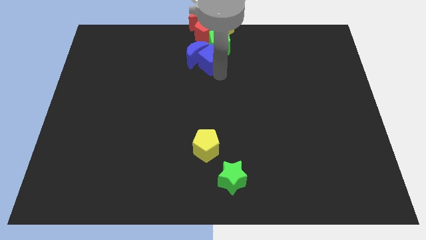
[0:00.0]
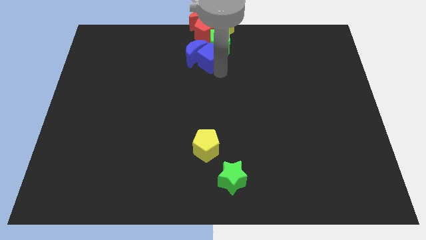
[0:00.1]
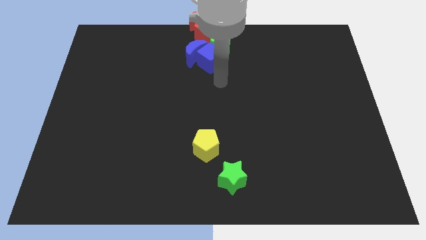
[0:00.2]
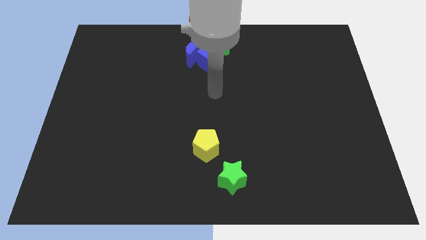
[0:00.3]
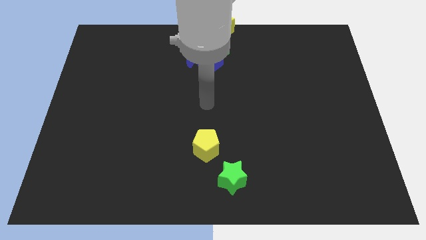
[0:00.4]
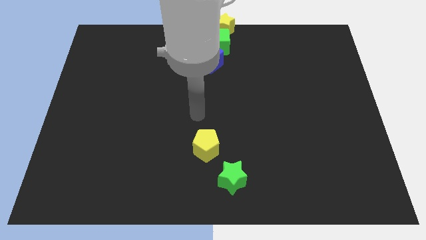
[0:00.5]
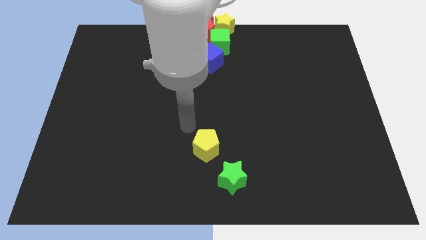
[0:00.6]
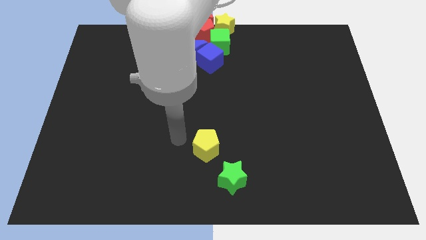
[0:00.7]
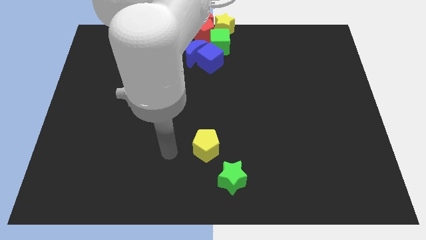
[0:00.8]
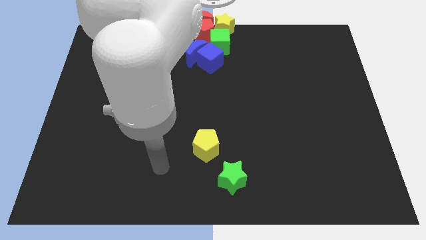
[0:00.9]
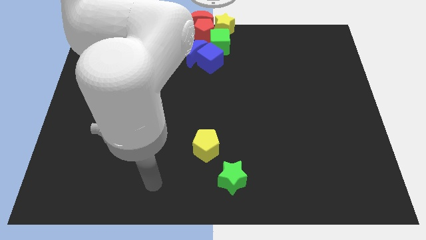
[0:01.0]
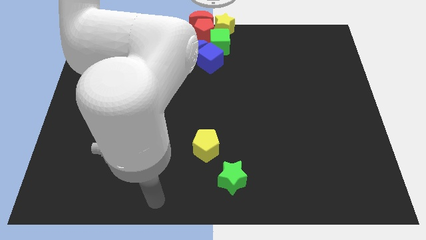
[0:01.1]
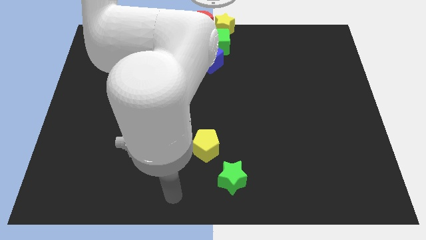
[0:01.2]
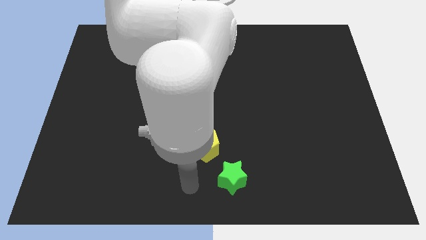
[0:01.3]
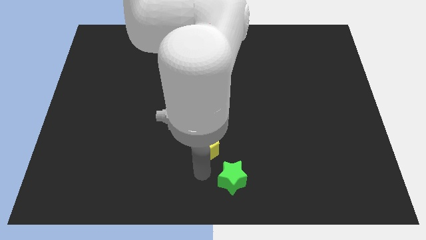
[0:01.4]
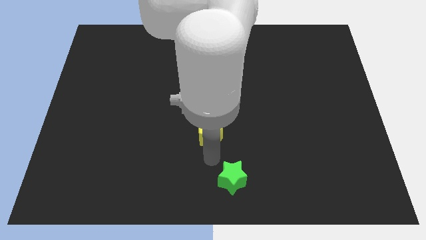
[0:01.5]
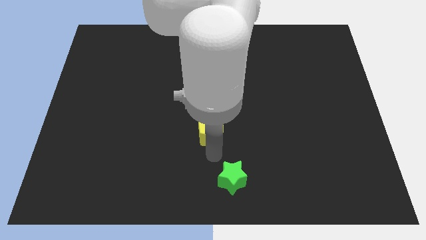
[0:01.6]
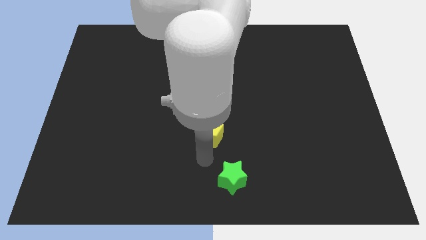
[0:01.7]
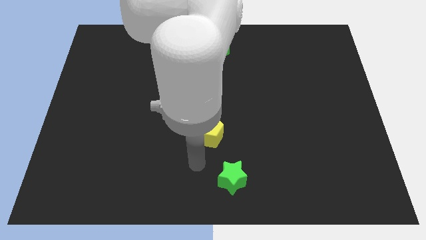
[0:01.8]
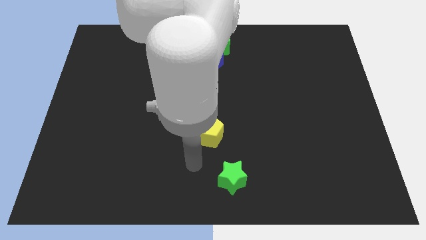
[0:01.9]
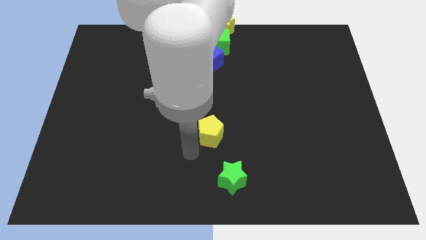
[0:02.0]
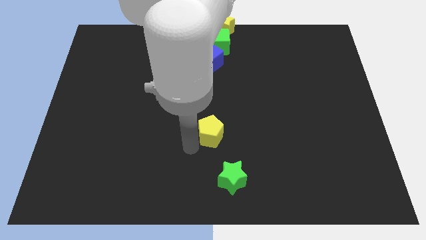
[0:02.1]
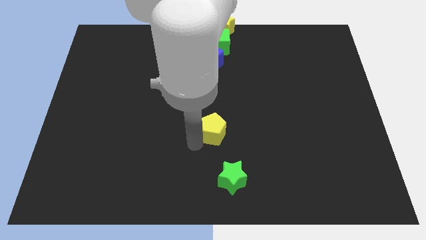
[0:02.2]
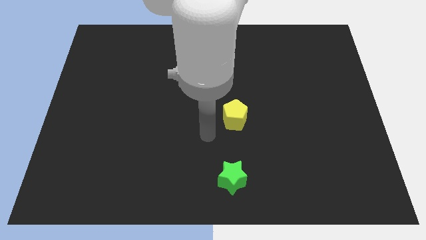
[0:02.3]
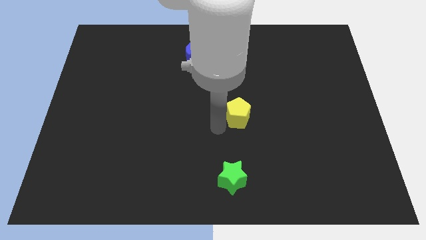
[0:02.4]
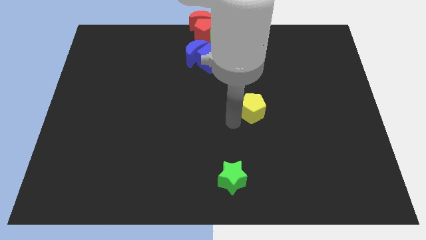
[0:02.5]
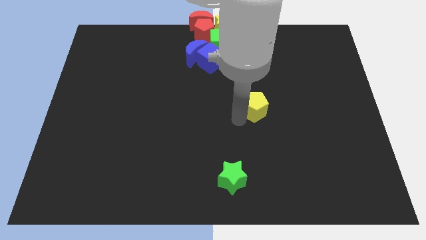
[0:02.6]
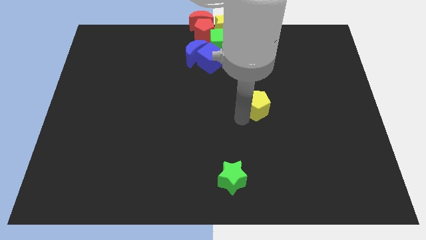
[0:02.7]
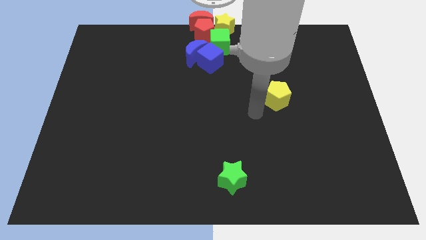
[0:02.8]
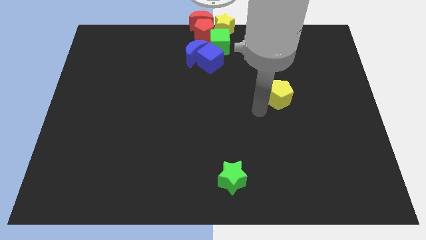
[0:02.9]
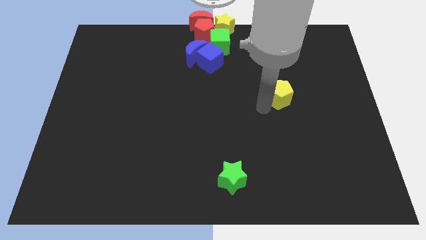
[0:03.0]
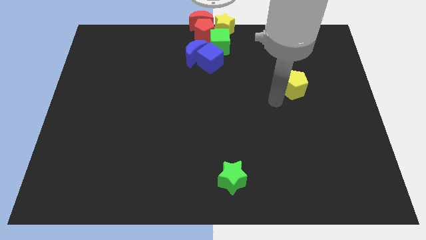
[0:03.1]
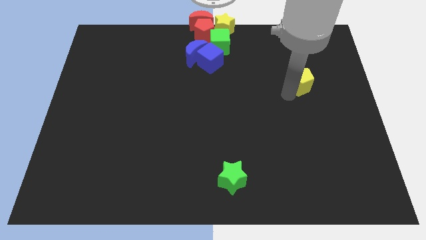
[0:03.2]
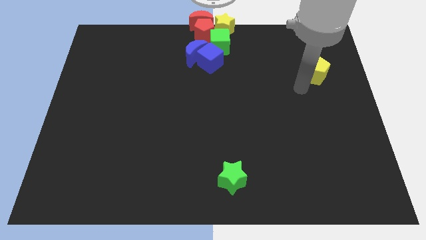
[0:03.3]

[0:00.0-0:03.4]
push the yellow pentagon to right side of the board

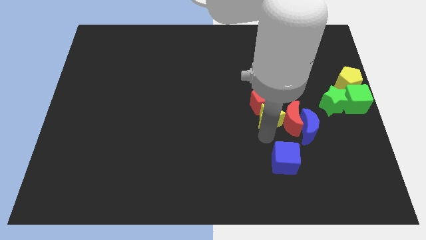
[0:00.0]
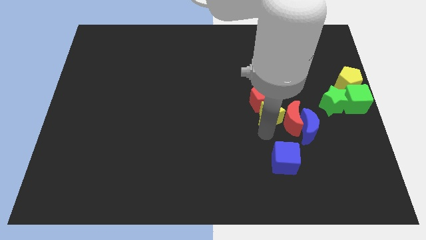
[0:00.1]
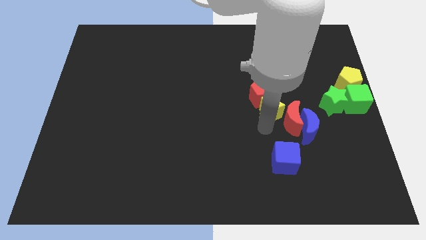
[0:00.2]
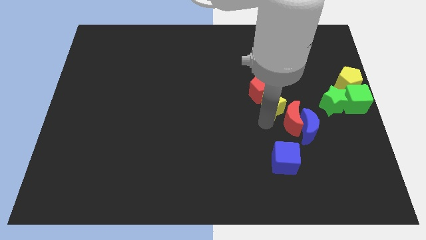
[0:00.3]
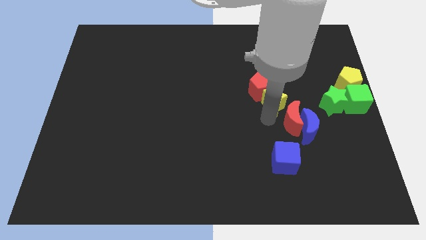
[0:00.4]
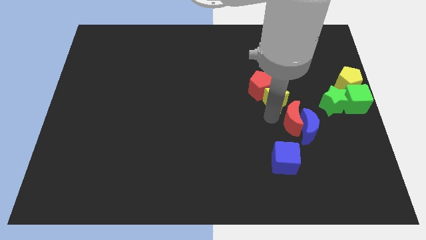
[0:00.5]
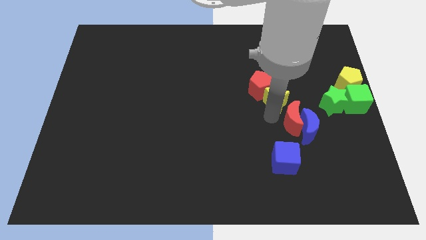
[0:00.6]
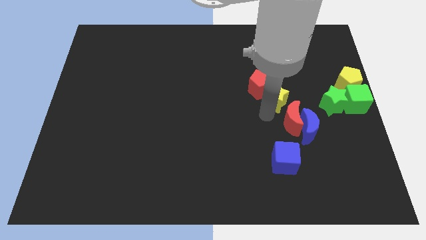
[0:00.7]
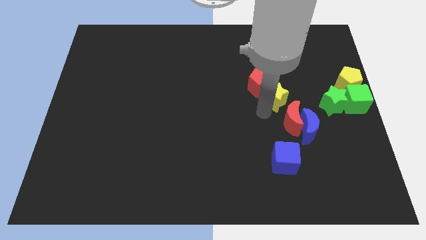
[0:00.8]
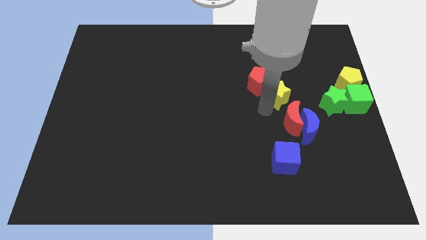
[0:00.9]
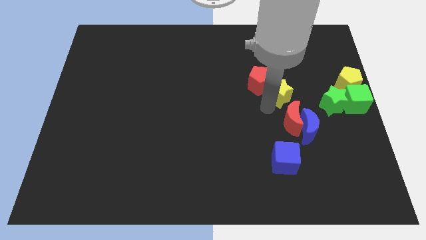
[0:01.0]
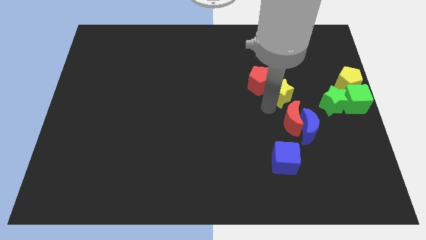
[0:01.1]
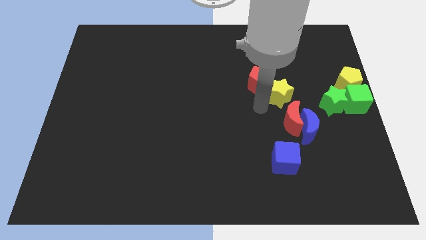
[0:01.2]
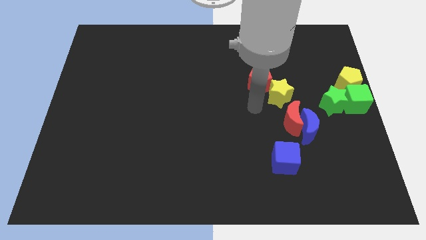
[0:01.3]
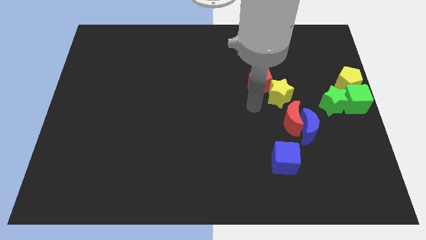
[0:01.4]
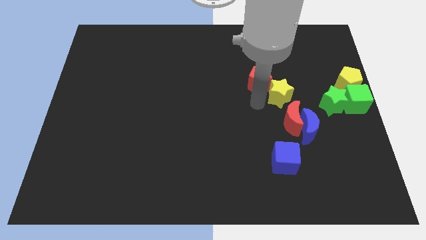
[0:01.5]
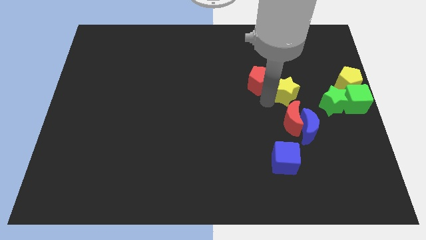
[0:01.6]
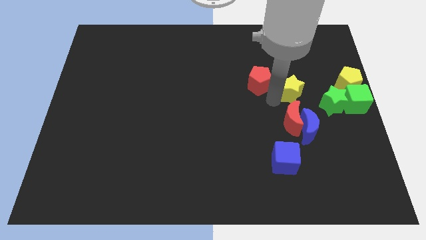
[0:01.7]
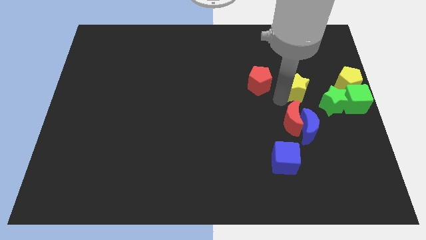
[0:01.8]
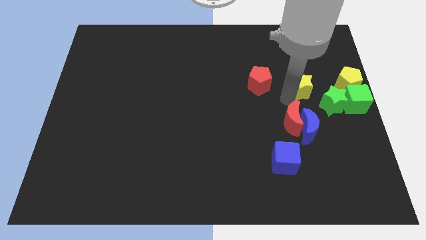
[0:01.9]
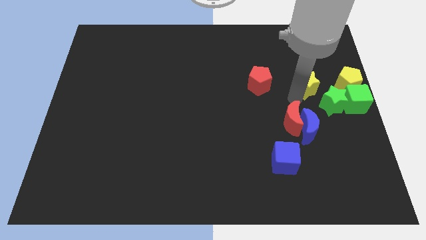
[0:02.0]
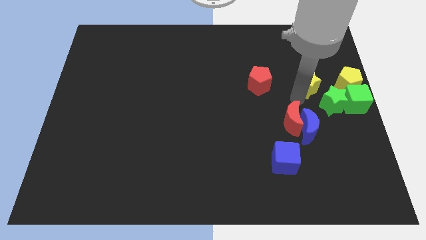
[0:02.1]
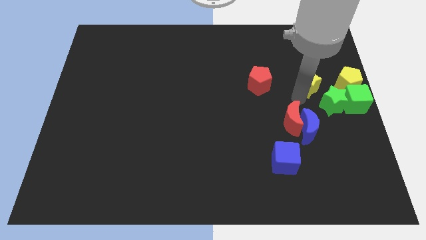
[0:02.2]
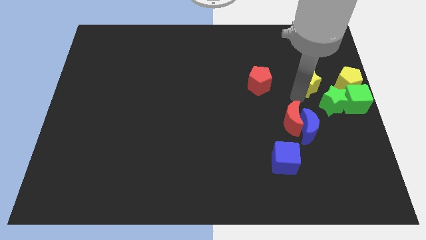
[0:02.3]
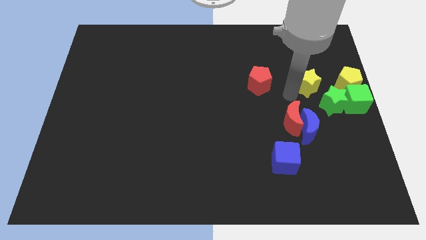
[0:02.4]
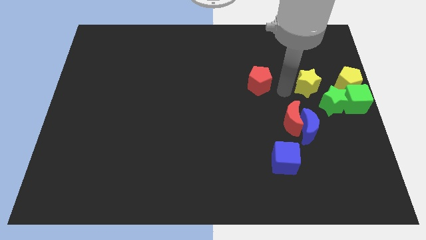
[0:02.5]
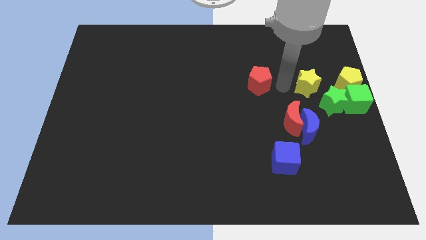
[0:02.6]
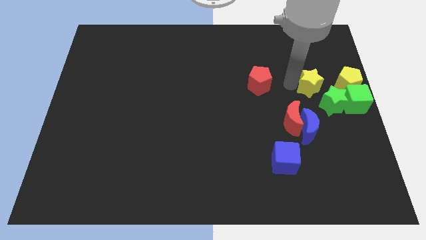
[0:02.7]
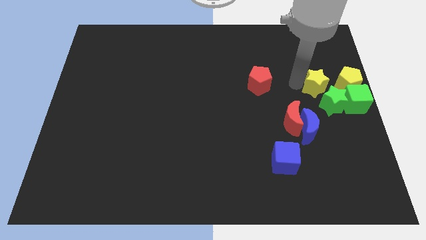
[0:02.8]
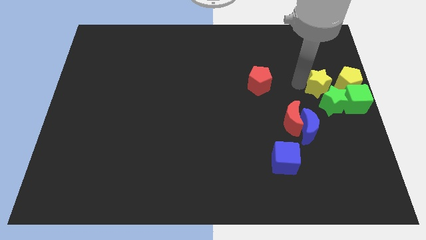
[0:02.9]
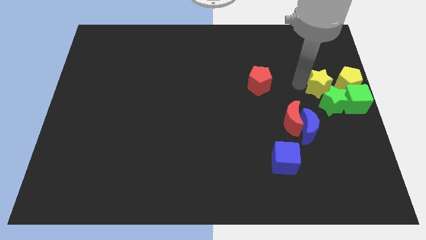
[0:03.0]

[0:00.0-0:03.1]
make the red pentagon and yellow star parallel to each other

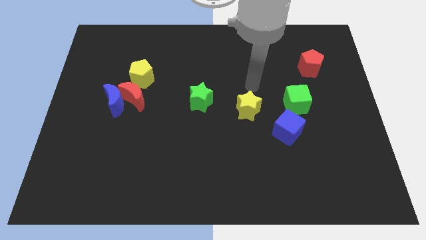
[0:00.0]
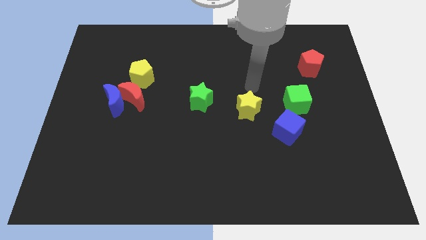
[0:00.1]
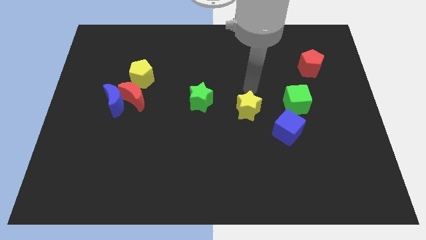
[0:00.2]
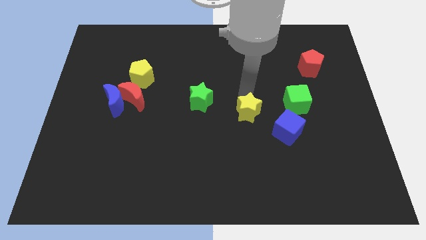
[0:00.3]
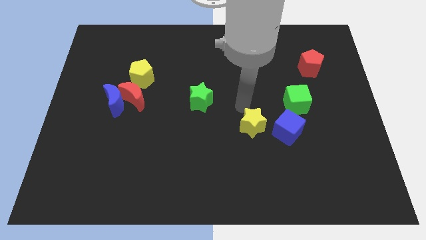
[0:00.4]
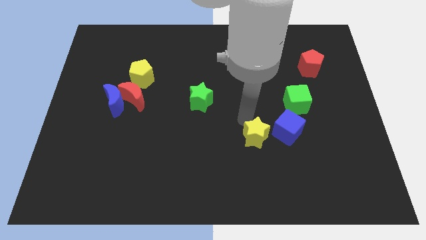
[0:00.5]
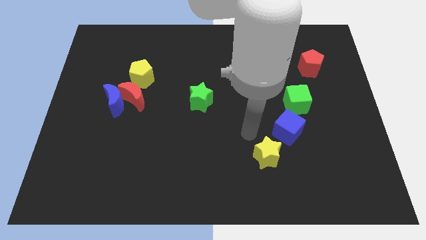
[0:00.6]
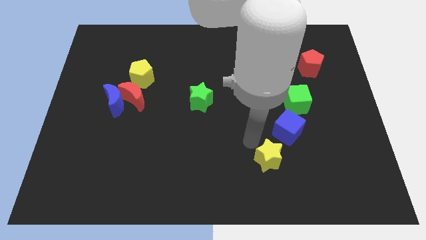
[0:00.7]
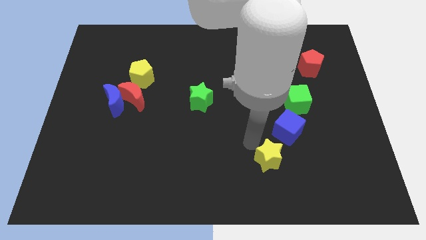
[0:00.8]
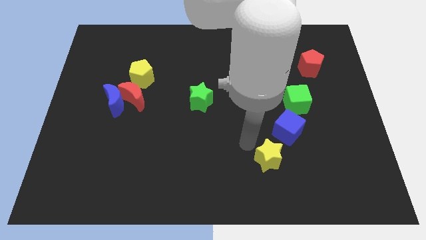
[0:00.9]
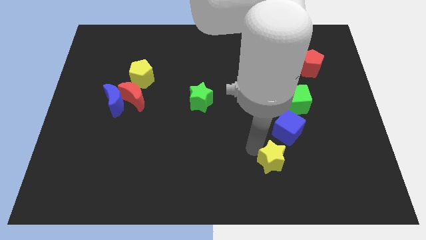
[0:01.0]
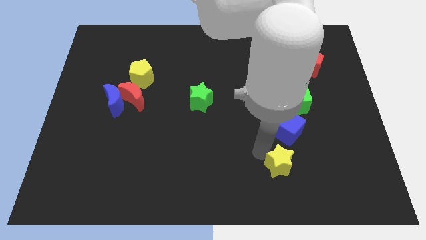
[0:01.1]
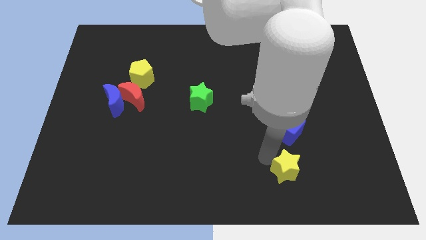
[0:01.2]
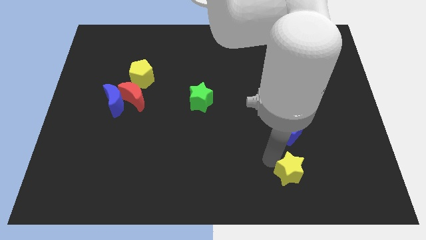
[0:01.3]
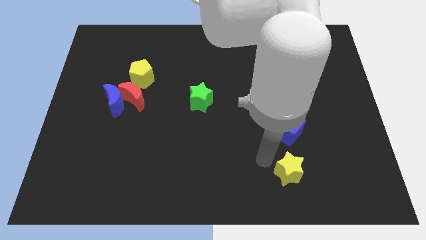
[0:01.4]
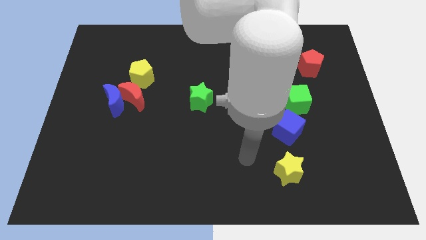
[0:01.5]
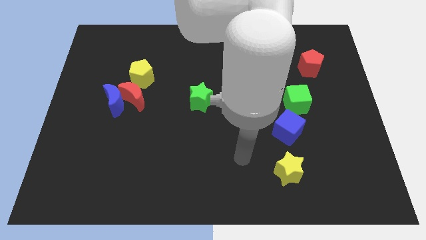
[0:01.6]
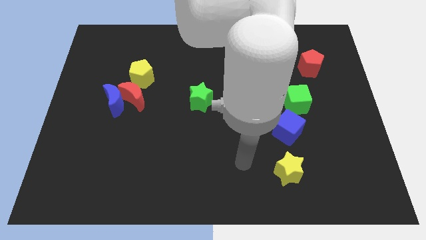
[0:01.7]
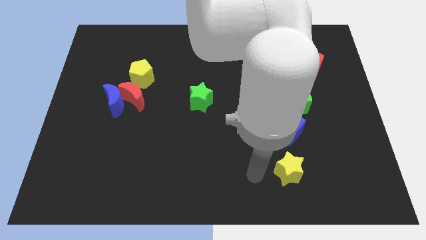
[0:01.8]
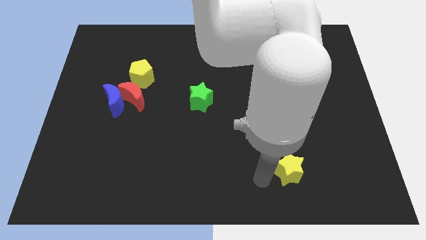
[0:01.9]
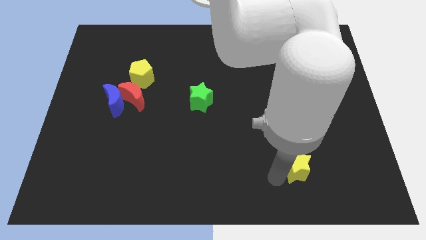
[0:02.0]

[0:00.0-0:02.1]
push the yellow star towards bottom right

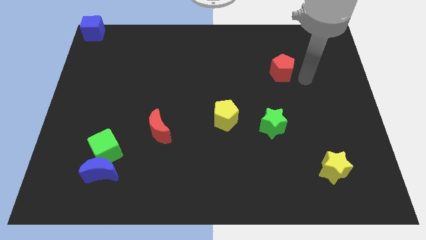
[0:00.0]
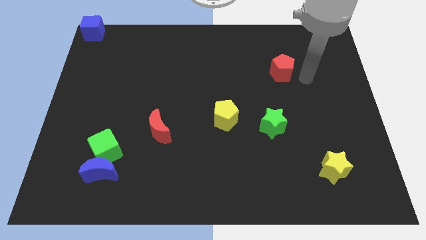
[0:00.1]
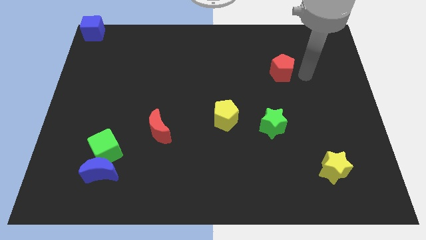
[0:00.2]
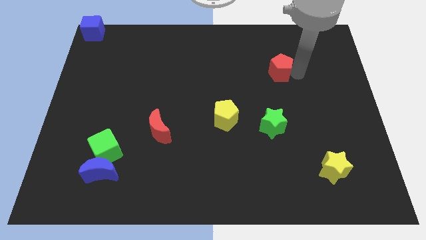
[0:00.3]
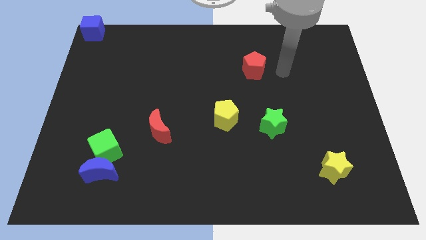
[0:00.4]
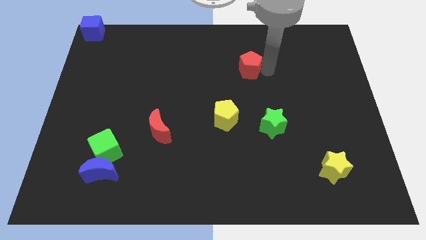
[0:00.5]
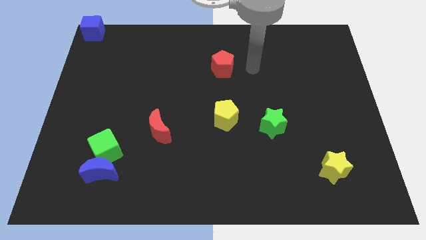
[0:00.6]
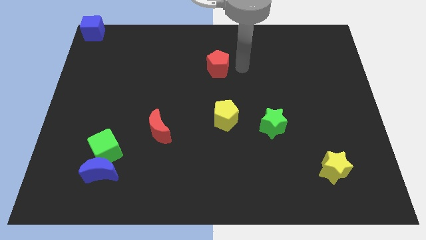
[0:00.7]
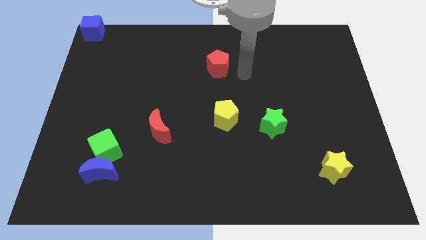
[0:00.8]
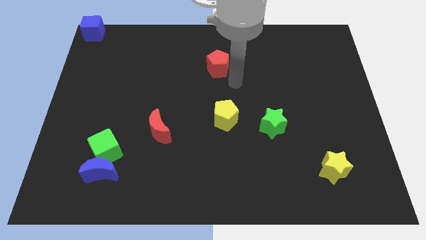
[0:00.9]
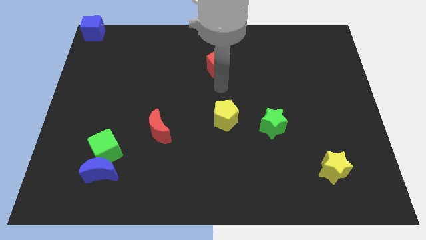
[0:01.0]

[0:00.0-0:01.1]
push the red pentagon slightly to the left
